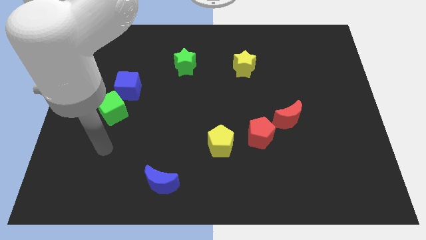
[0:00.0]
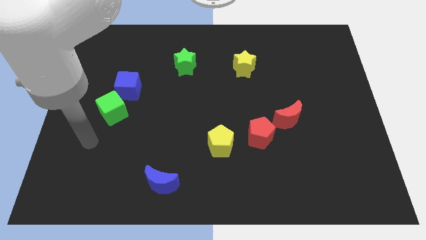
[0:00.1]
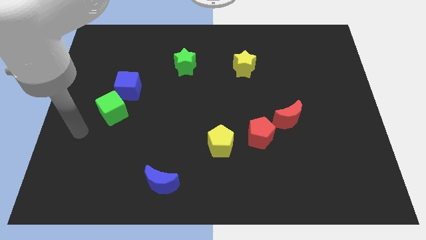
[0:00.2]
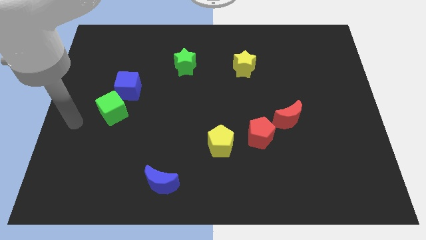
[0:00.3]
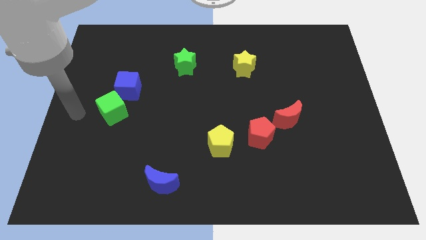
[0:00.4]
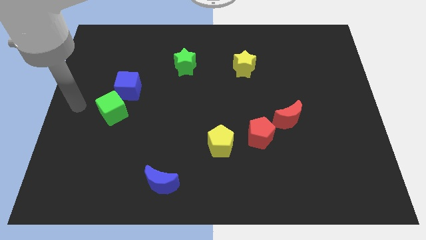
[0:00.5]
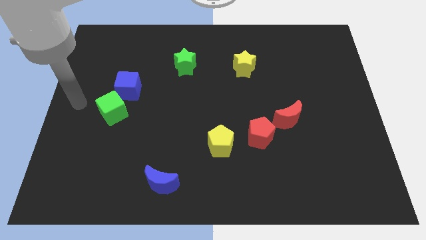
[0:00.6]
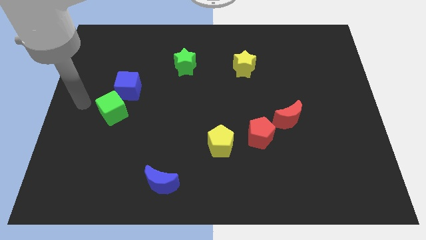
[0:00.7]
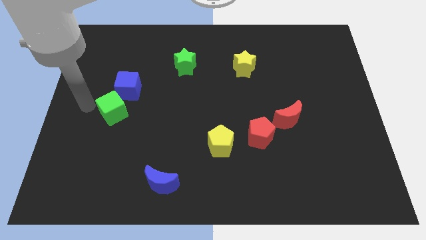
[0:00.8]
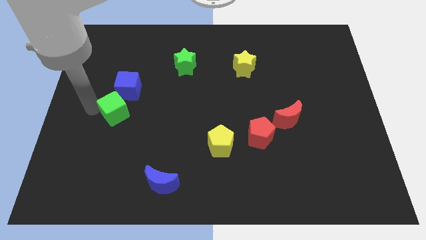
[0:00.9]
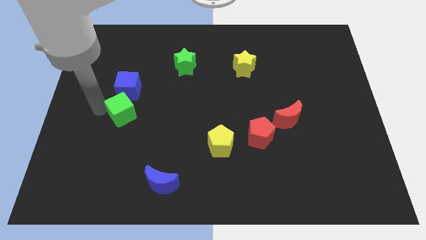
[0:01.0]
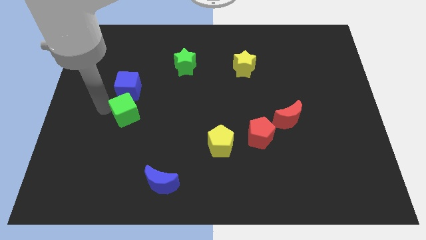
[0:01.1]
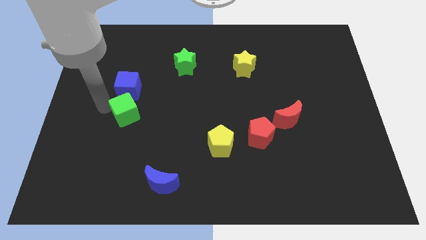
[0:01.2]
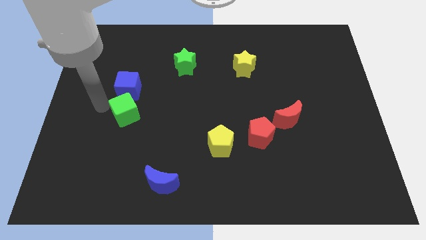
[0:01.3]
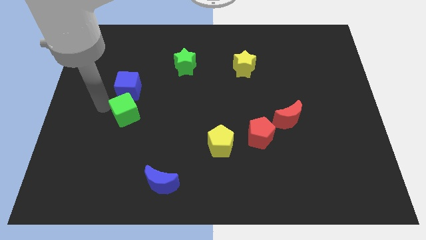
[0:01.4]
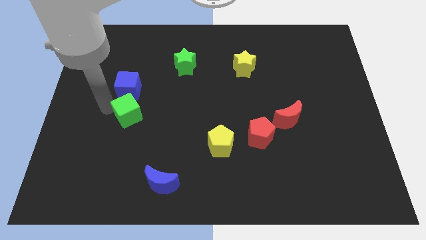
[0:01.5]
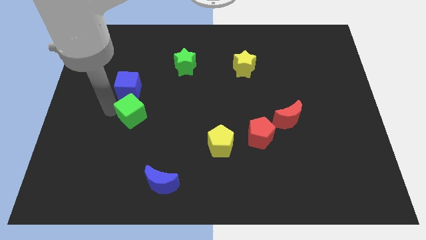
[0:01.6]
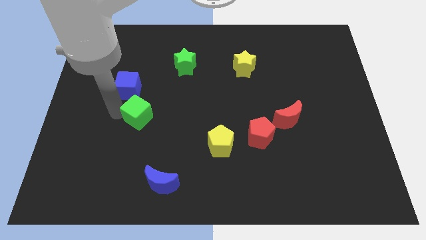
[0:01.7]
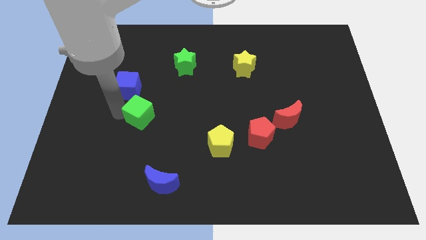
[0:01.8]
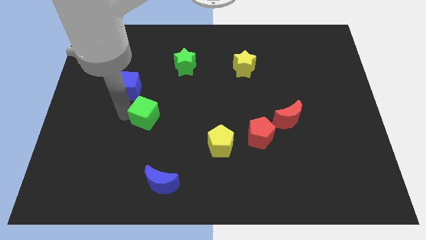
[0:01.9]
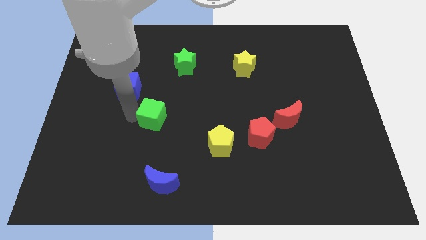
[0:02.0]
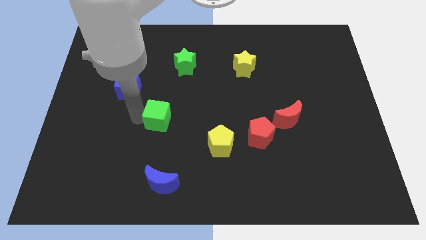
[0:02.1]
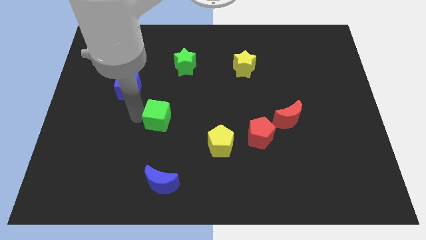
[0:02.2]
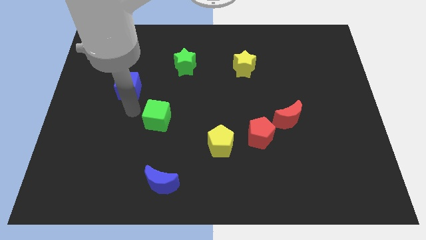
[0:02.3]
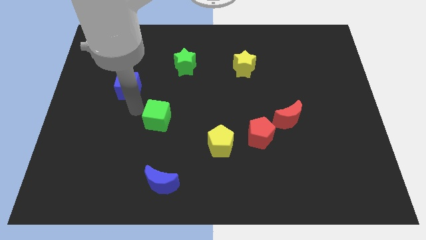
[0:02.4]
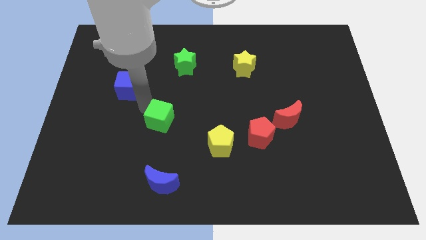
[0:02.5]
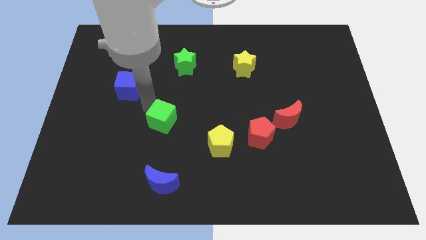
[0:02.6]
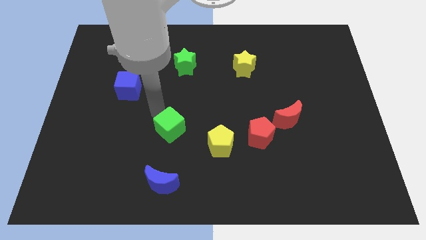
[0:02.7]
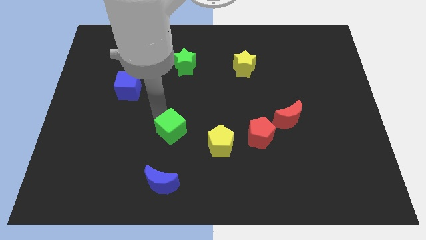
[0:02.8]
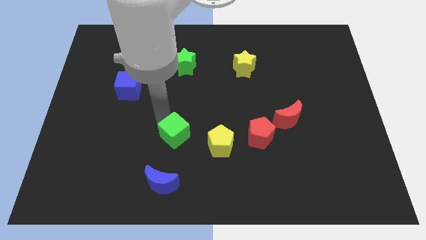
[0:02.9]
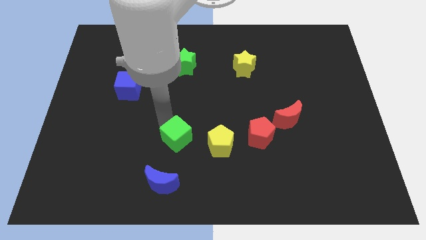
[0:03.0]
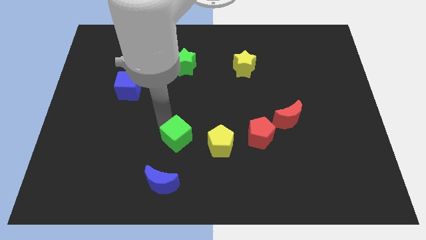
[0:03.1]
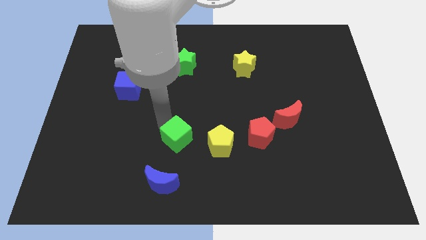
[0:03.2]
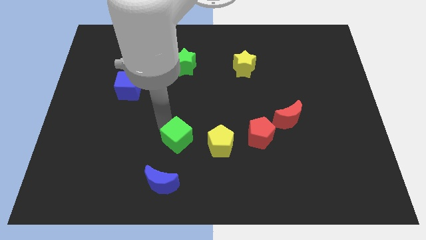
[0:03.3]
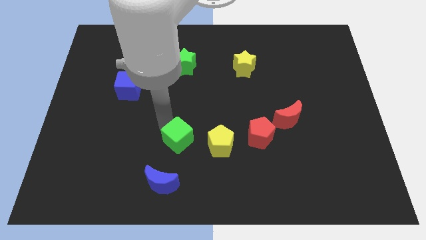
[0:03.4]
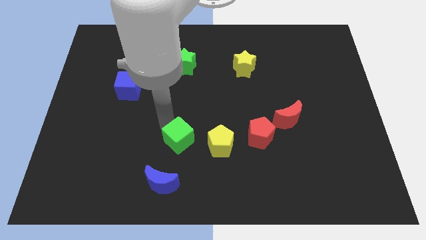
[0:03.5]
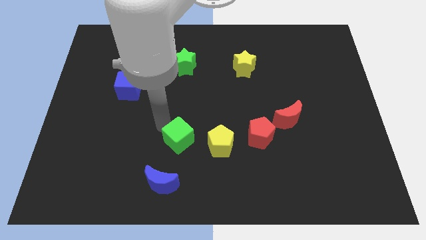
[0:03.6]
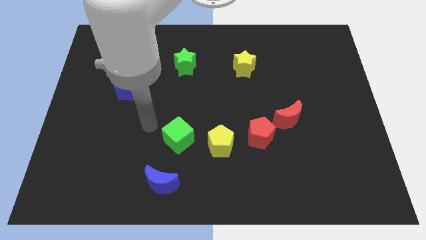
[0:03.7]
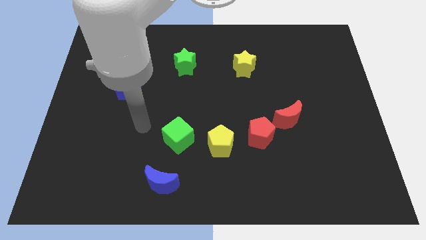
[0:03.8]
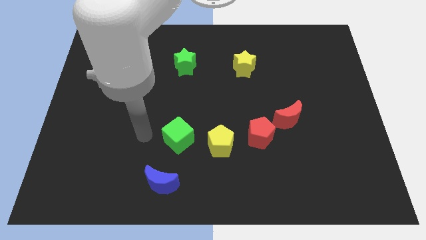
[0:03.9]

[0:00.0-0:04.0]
move the green cube towards the yellow pentagon

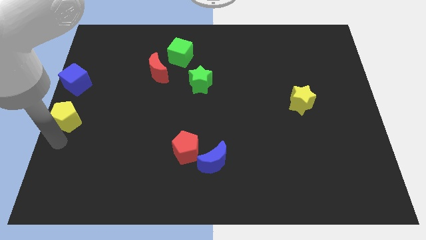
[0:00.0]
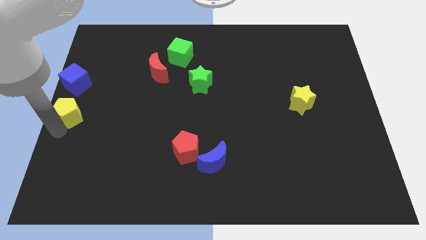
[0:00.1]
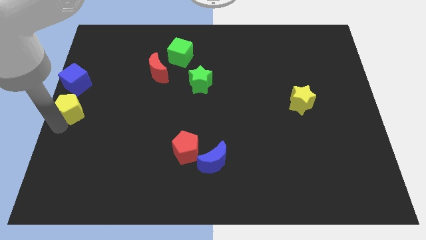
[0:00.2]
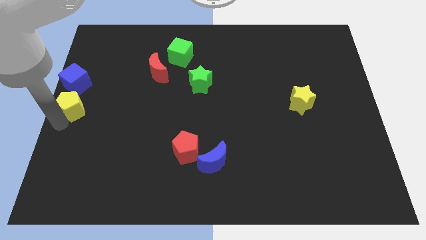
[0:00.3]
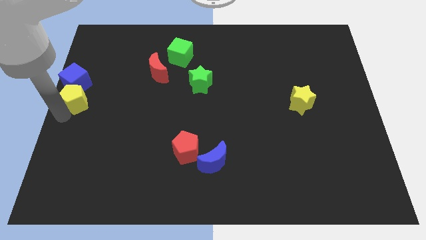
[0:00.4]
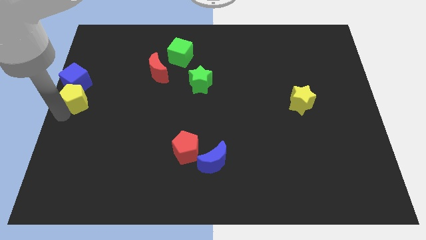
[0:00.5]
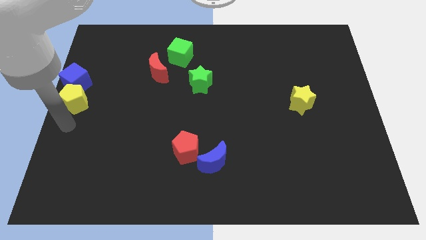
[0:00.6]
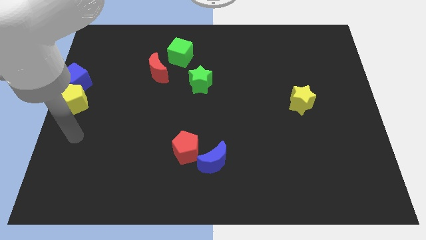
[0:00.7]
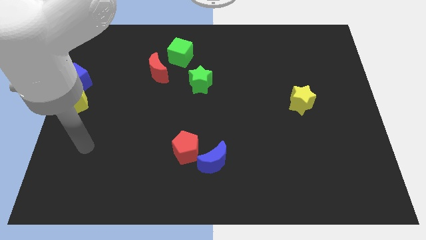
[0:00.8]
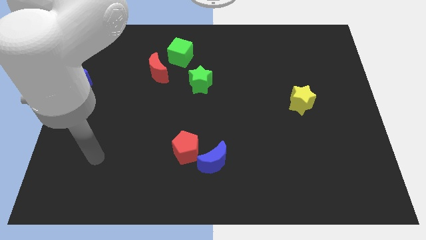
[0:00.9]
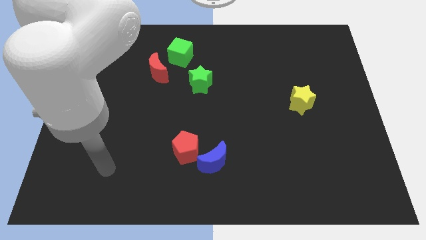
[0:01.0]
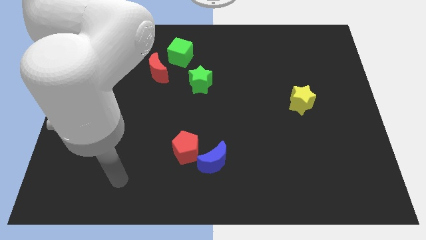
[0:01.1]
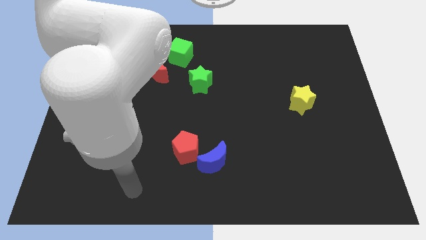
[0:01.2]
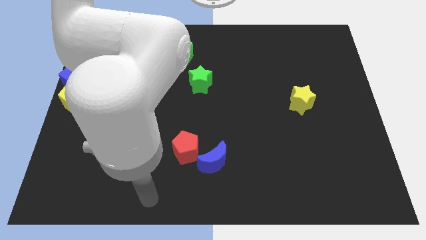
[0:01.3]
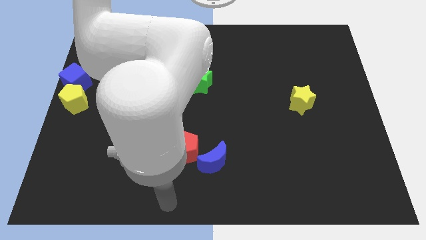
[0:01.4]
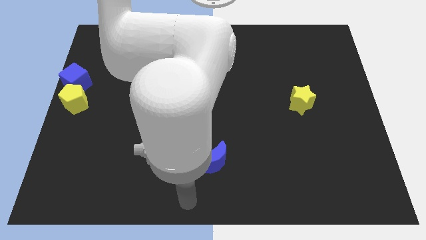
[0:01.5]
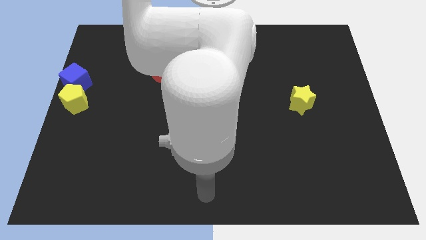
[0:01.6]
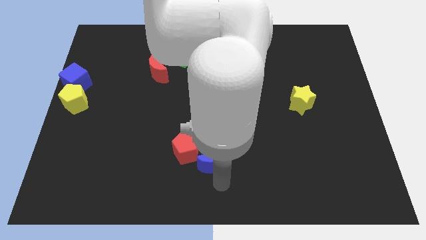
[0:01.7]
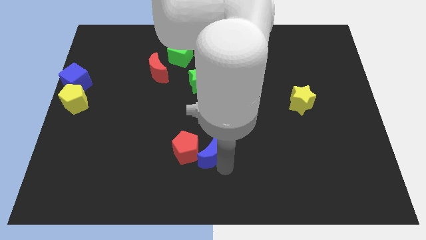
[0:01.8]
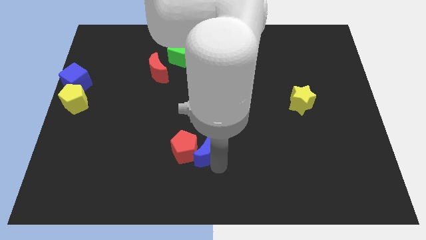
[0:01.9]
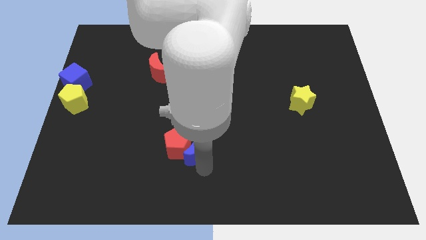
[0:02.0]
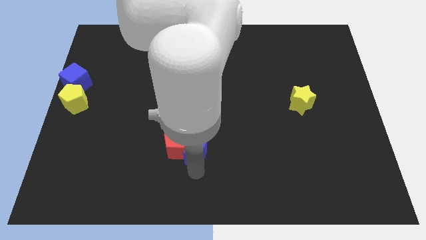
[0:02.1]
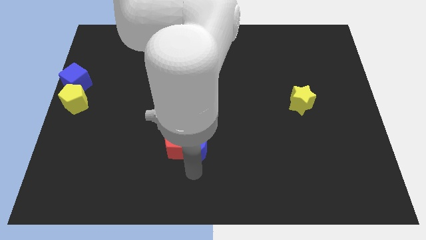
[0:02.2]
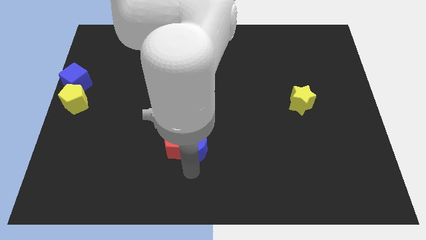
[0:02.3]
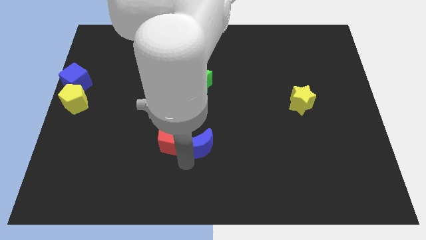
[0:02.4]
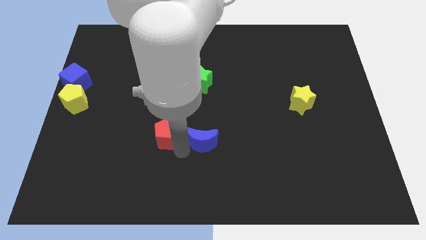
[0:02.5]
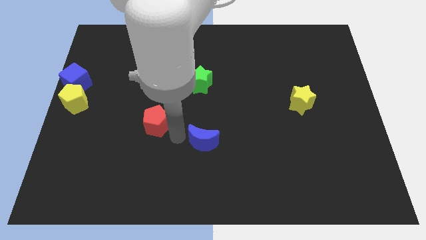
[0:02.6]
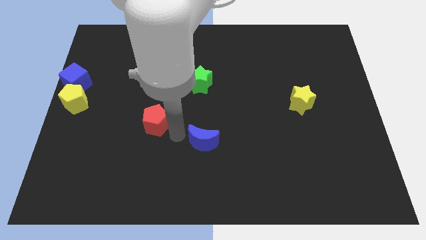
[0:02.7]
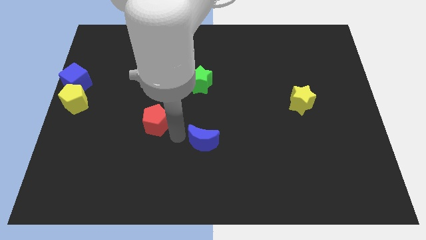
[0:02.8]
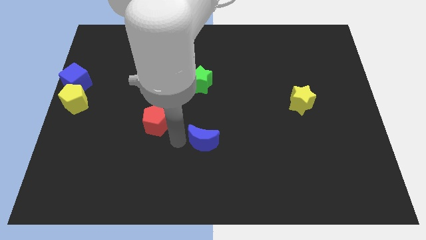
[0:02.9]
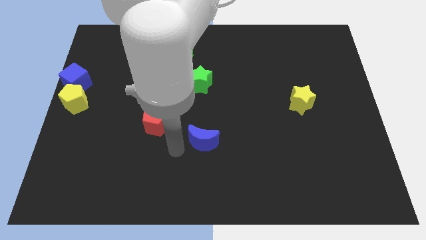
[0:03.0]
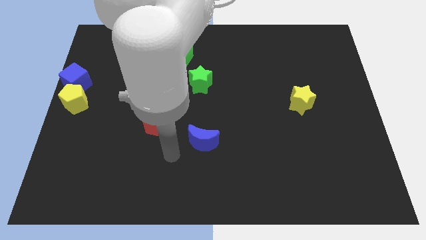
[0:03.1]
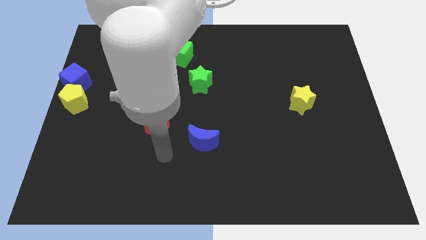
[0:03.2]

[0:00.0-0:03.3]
separate the red pentagon and blue moon

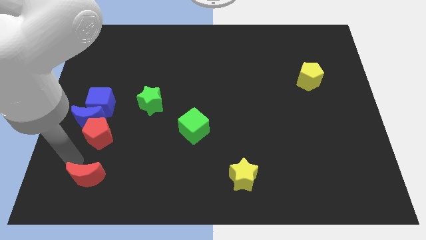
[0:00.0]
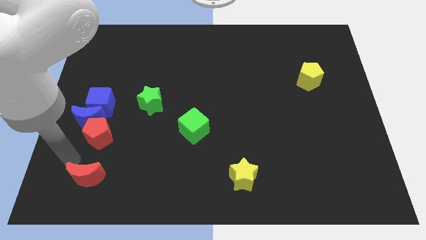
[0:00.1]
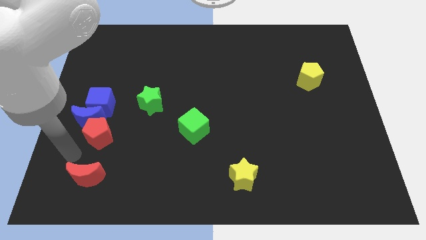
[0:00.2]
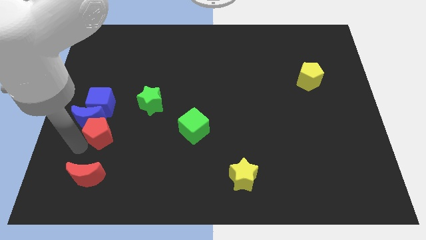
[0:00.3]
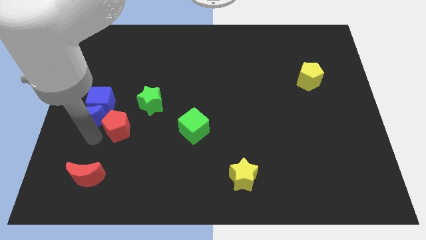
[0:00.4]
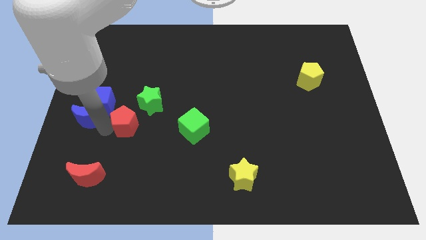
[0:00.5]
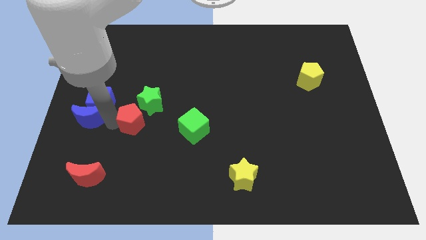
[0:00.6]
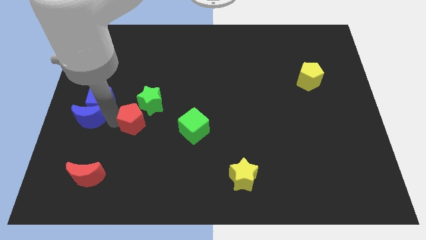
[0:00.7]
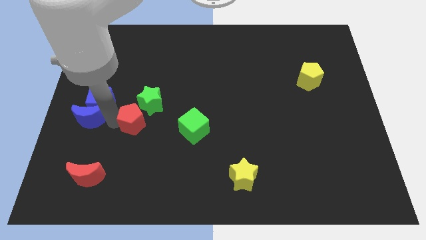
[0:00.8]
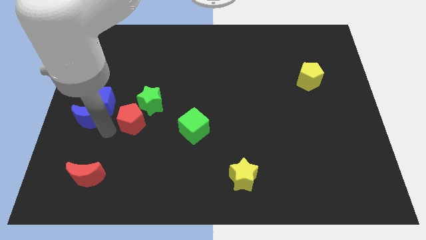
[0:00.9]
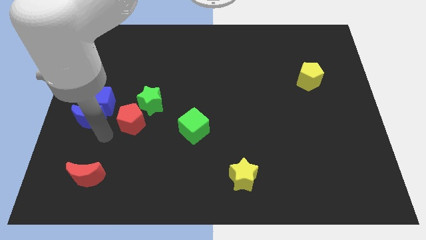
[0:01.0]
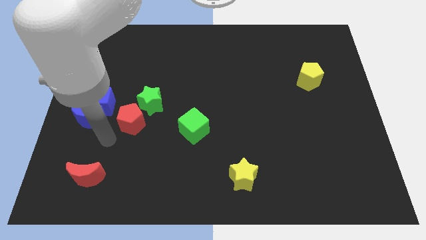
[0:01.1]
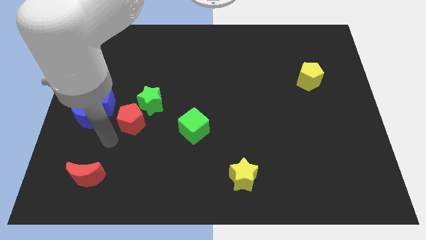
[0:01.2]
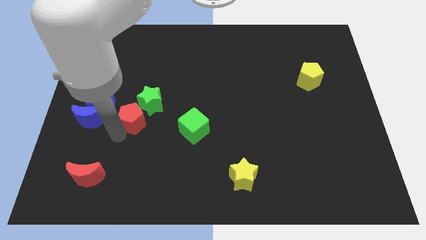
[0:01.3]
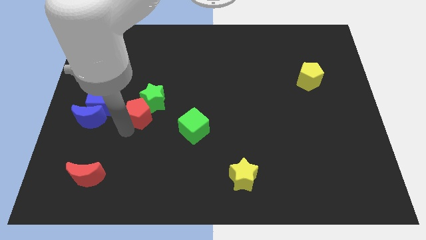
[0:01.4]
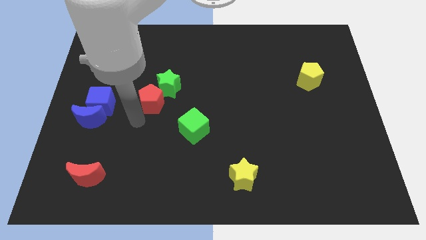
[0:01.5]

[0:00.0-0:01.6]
push the red pentagon into the green star

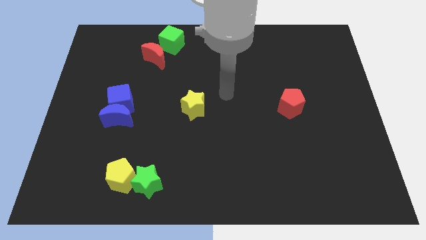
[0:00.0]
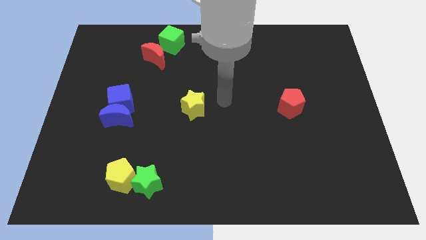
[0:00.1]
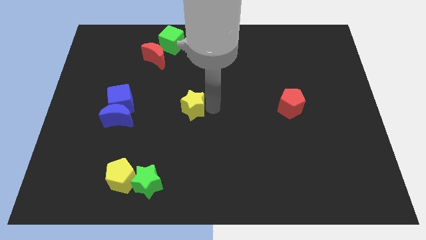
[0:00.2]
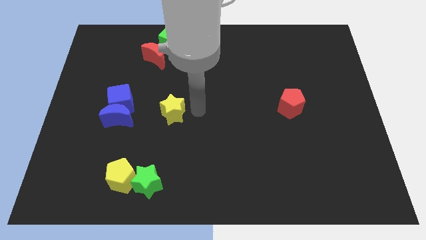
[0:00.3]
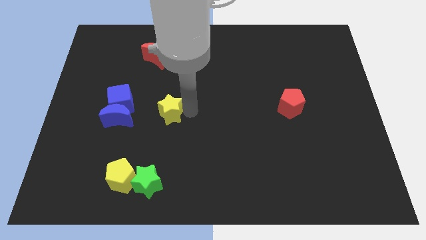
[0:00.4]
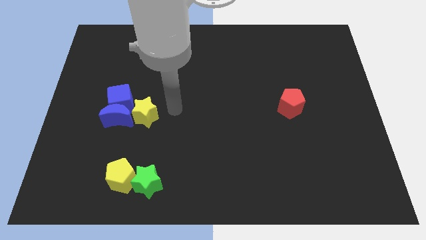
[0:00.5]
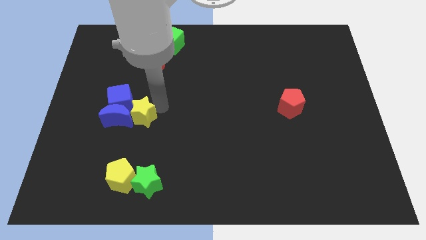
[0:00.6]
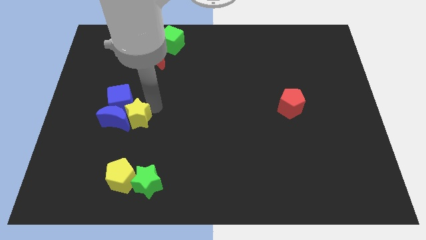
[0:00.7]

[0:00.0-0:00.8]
push the yellow star into the blue blocks
